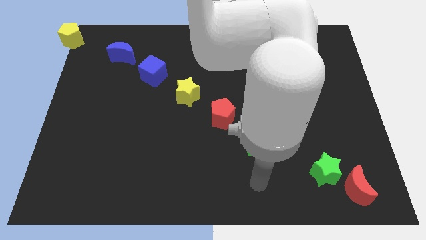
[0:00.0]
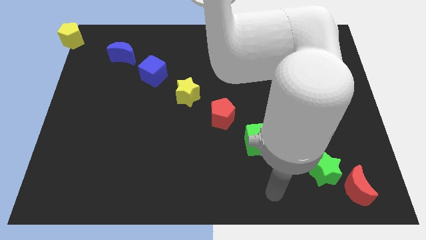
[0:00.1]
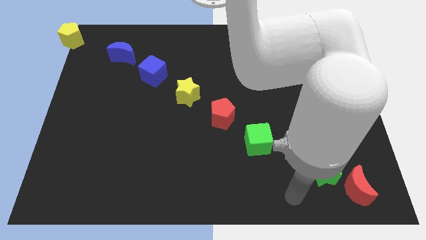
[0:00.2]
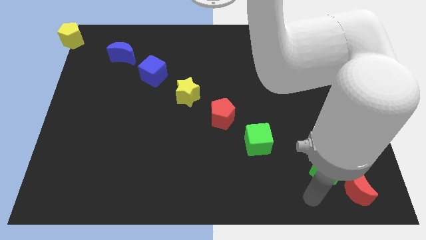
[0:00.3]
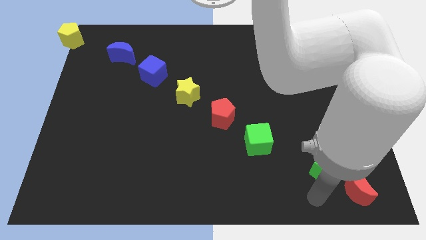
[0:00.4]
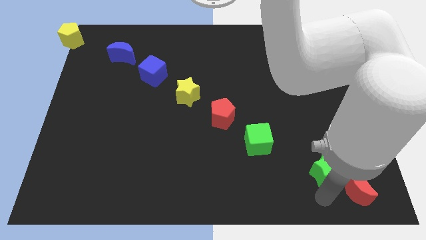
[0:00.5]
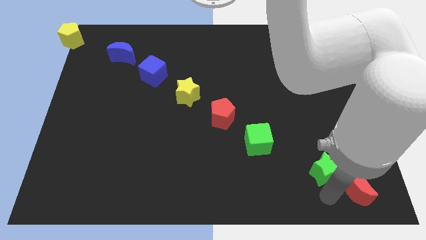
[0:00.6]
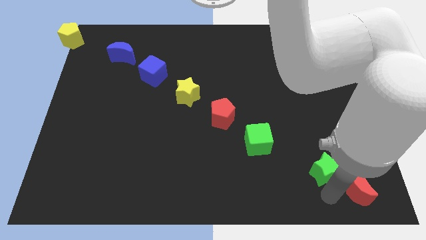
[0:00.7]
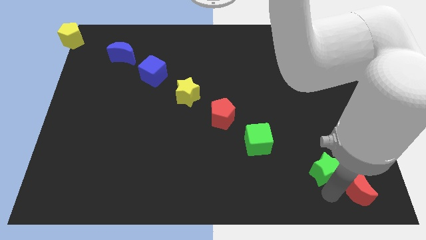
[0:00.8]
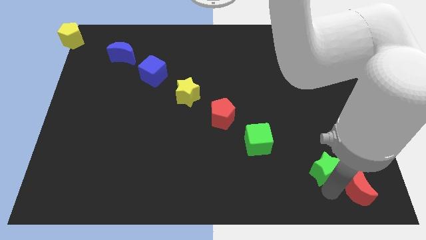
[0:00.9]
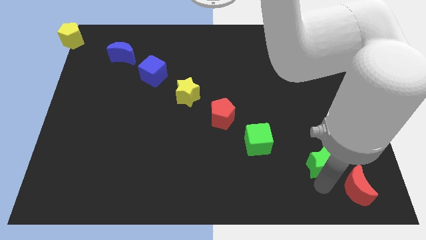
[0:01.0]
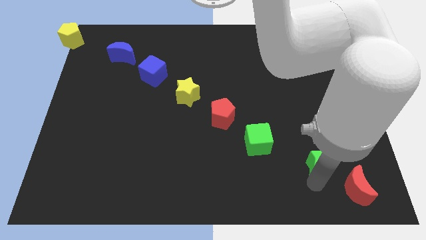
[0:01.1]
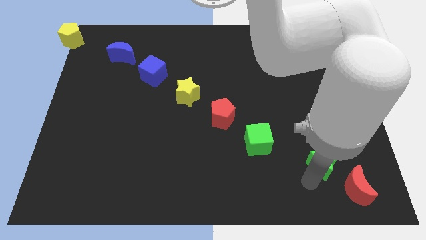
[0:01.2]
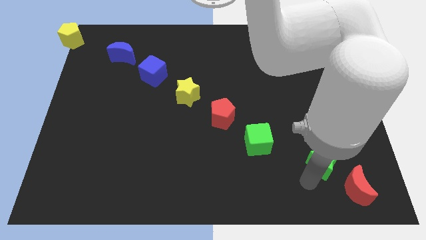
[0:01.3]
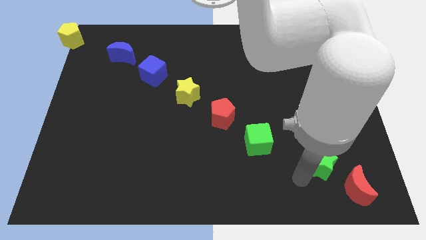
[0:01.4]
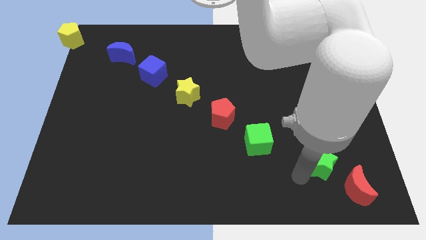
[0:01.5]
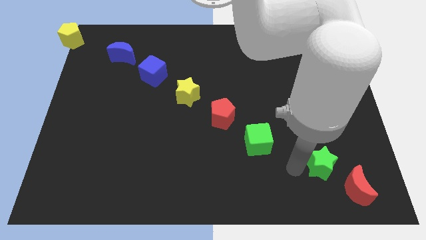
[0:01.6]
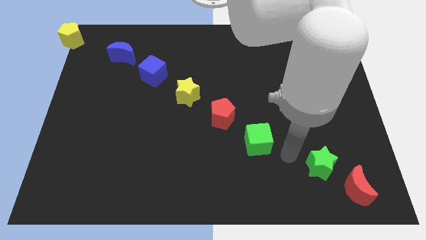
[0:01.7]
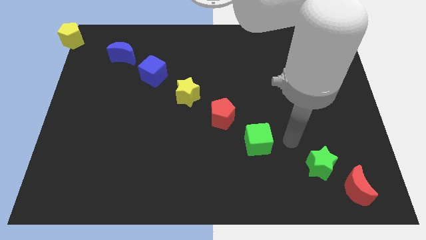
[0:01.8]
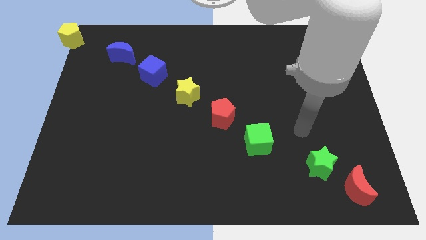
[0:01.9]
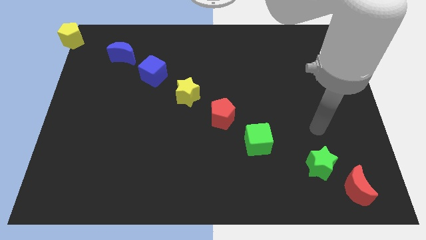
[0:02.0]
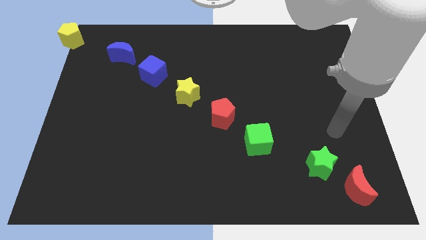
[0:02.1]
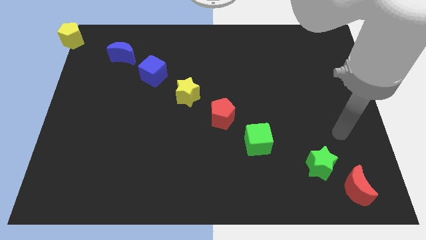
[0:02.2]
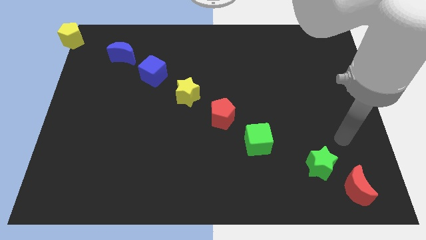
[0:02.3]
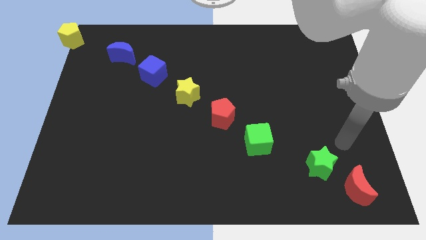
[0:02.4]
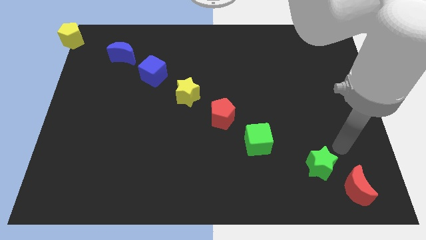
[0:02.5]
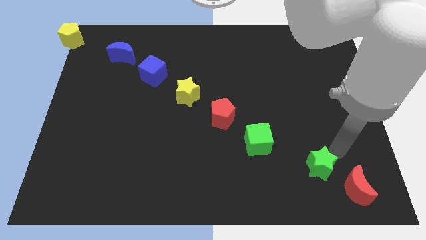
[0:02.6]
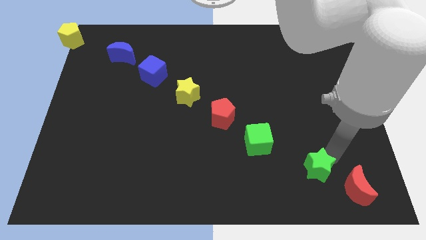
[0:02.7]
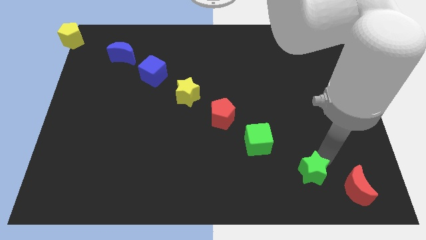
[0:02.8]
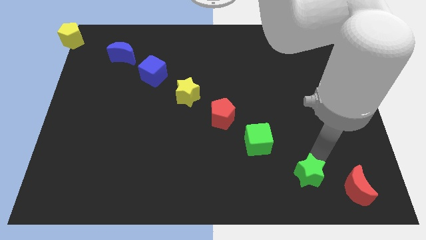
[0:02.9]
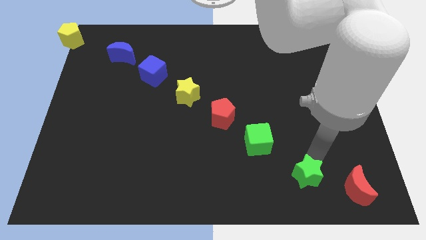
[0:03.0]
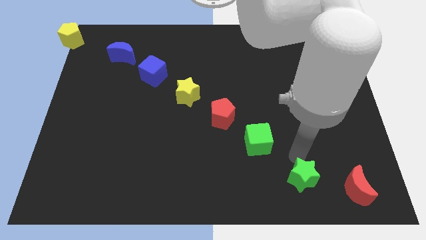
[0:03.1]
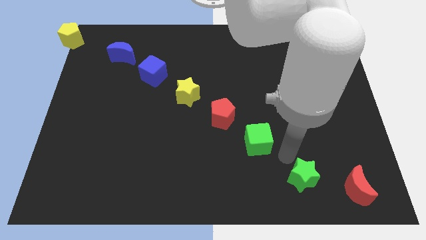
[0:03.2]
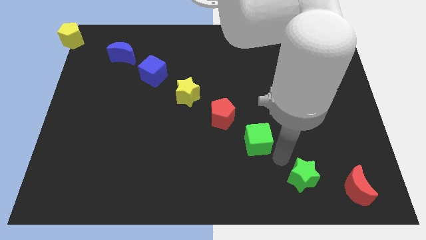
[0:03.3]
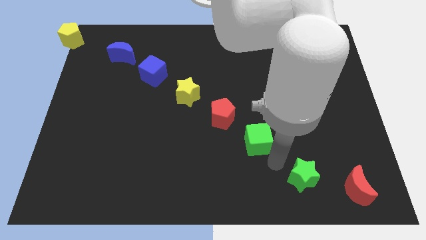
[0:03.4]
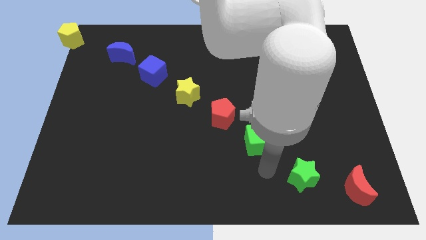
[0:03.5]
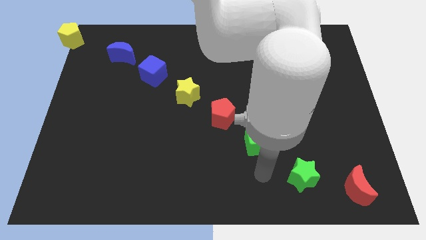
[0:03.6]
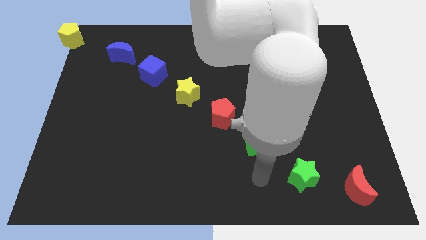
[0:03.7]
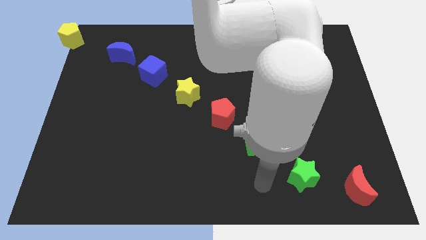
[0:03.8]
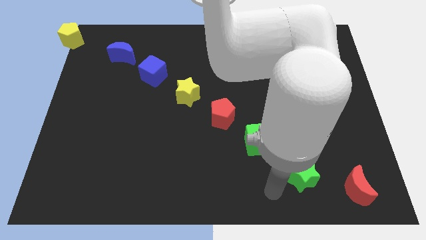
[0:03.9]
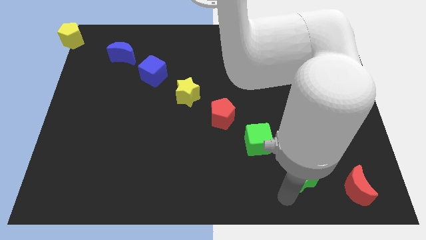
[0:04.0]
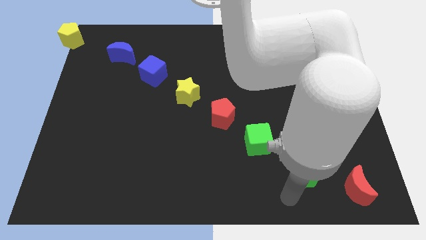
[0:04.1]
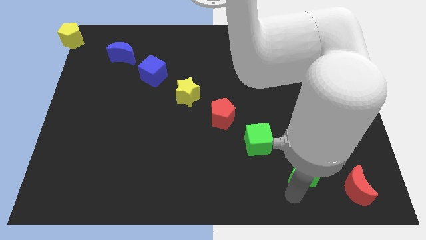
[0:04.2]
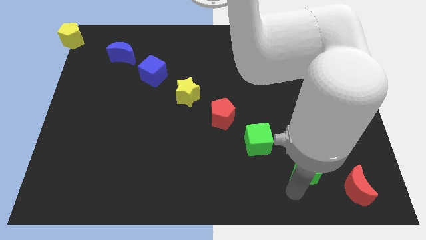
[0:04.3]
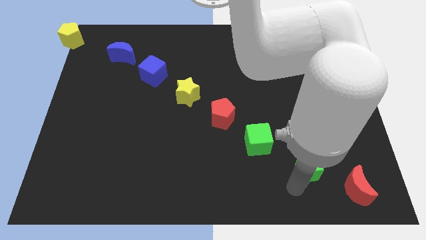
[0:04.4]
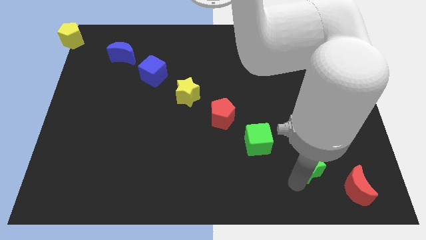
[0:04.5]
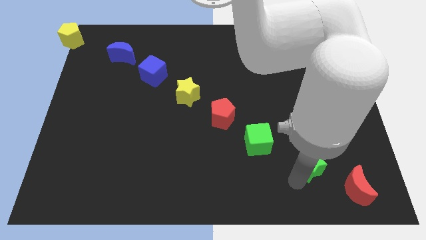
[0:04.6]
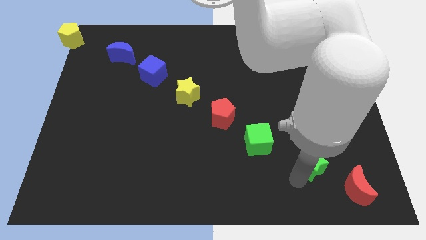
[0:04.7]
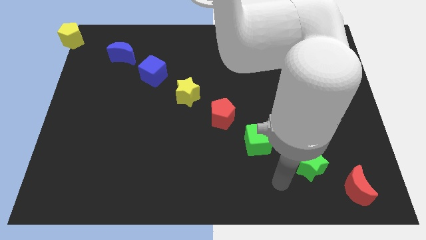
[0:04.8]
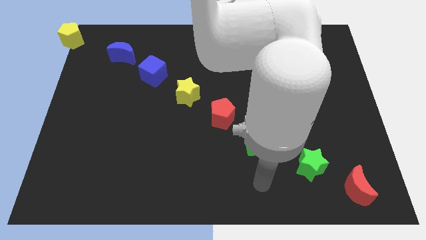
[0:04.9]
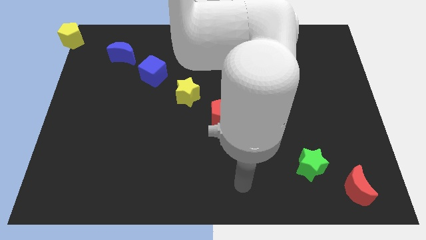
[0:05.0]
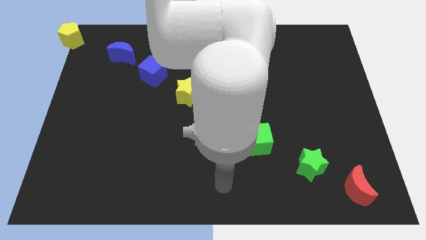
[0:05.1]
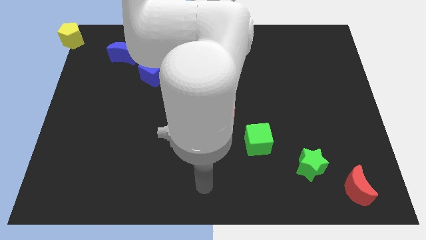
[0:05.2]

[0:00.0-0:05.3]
adjust the position of the green star upwards

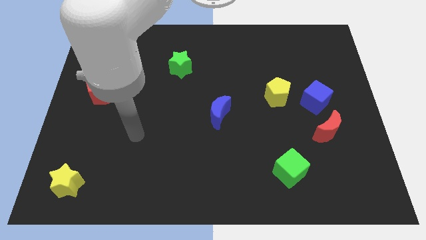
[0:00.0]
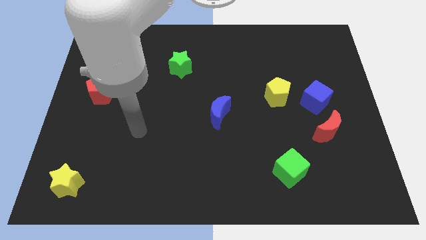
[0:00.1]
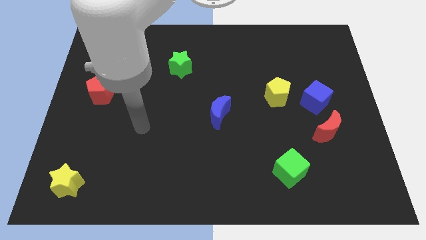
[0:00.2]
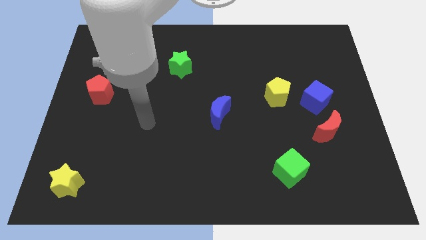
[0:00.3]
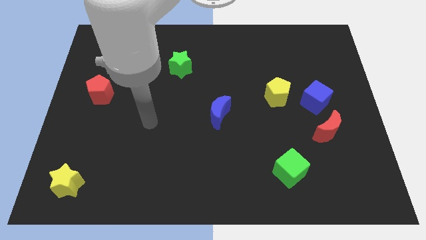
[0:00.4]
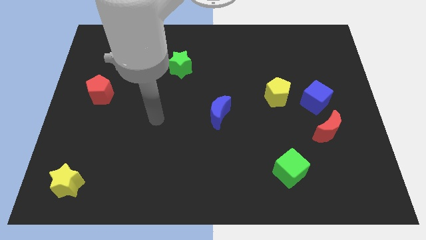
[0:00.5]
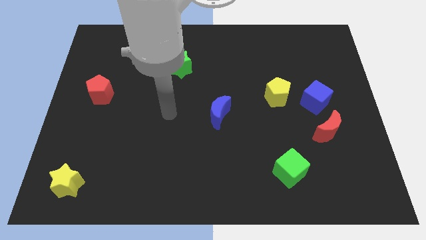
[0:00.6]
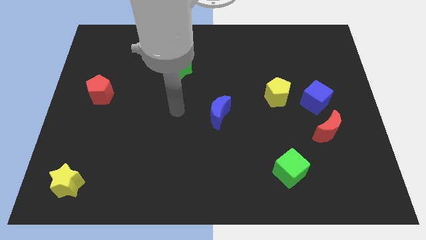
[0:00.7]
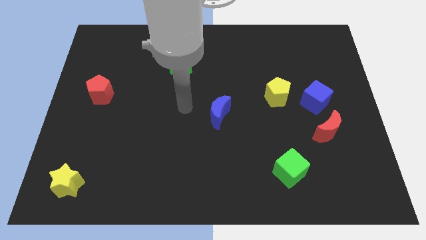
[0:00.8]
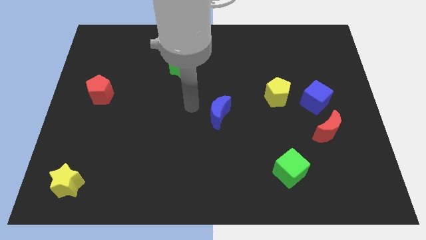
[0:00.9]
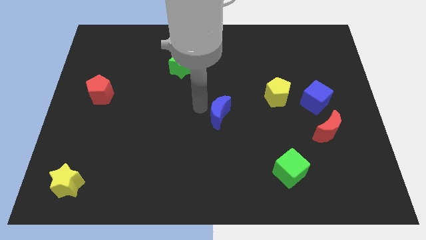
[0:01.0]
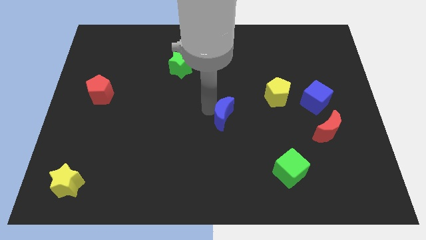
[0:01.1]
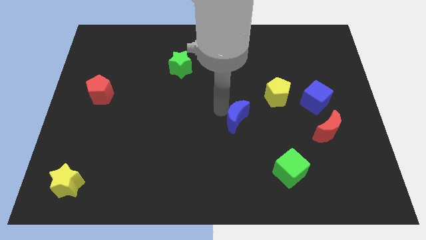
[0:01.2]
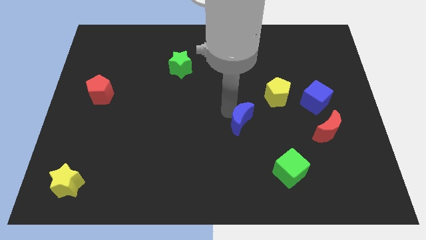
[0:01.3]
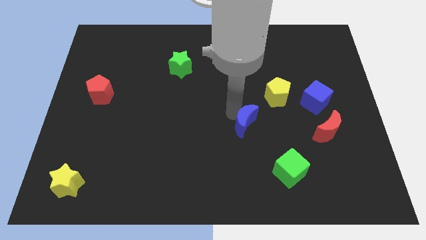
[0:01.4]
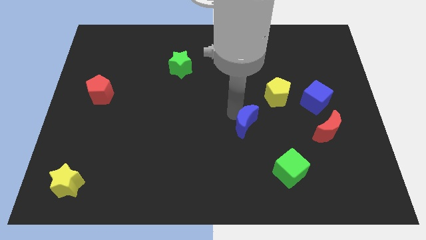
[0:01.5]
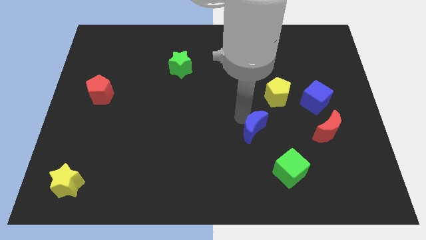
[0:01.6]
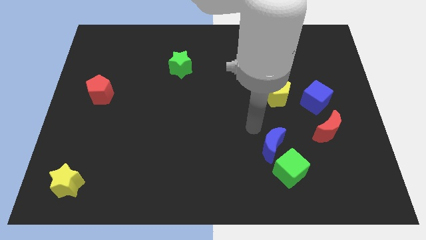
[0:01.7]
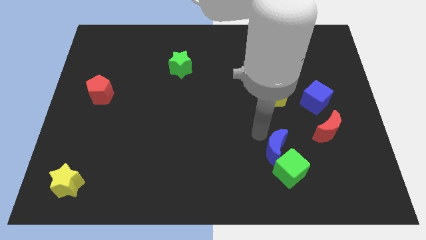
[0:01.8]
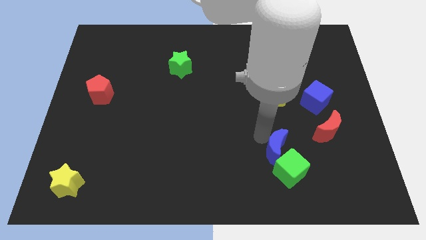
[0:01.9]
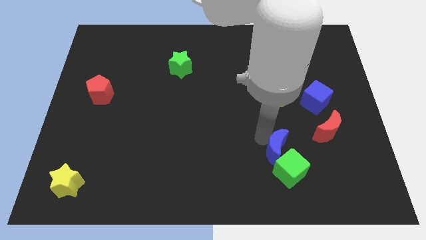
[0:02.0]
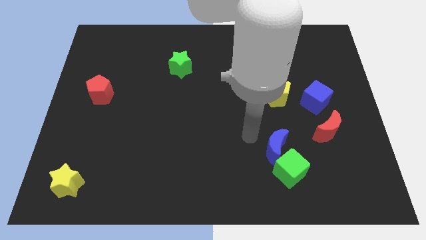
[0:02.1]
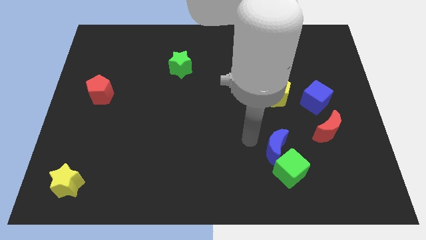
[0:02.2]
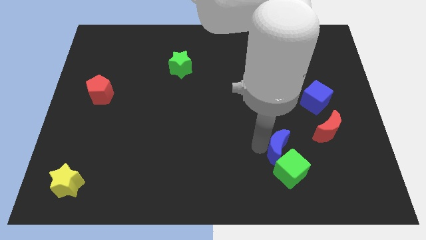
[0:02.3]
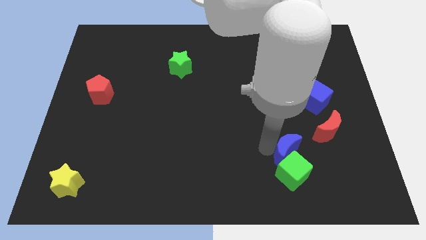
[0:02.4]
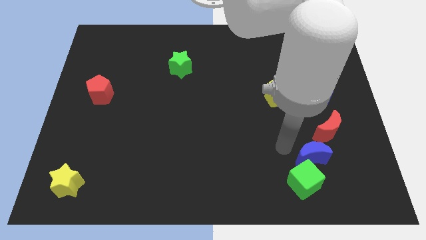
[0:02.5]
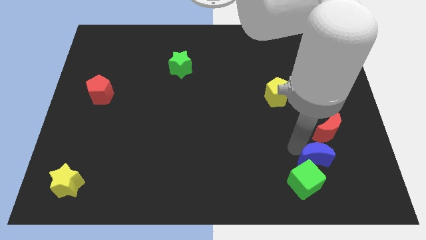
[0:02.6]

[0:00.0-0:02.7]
move blue crescent into the green cube

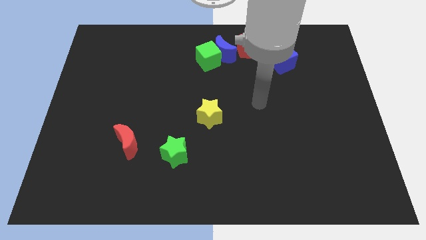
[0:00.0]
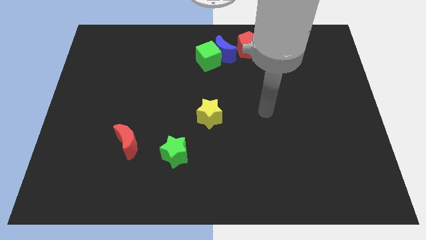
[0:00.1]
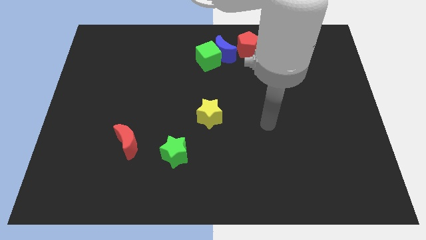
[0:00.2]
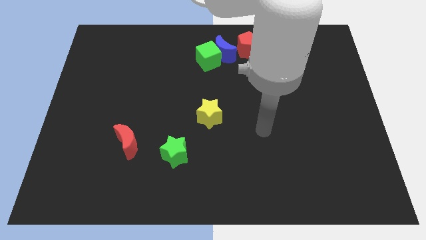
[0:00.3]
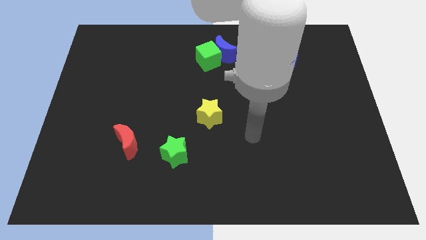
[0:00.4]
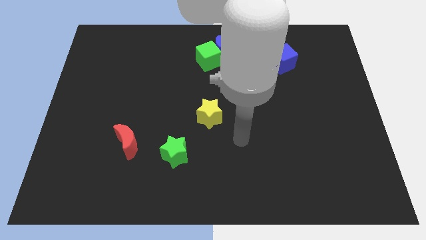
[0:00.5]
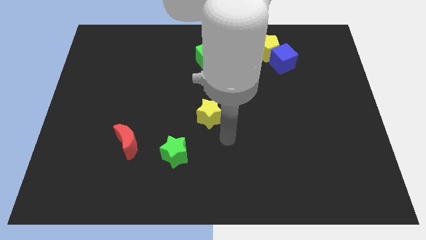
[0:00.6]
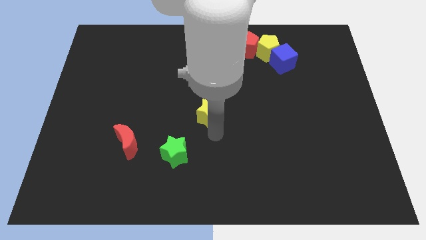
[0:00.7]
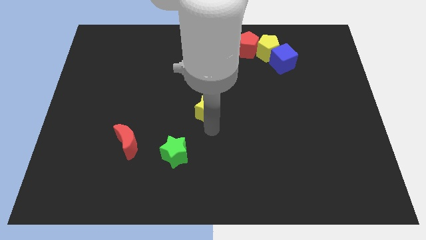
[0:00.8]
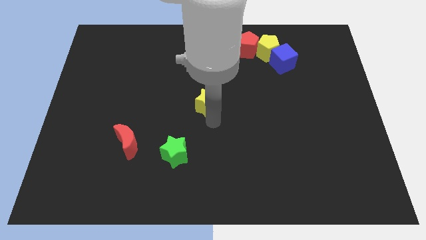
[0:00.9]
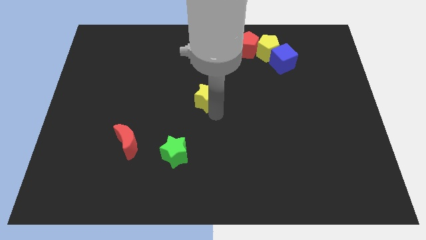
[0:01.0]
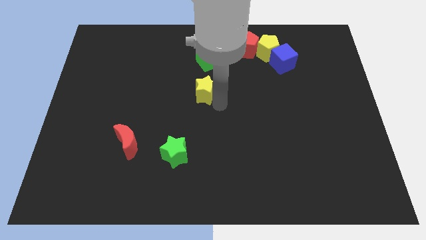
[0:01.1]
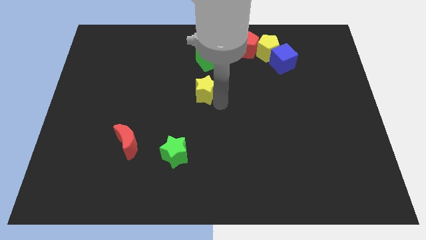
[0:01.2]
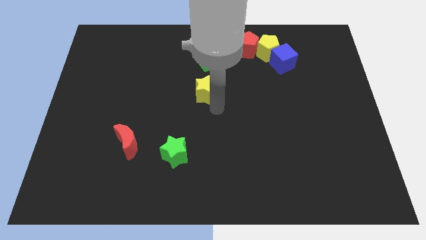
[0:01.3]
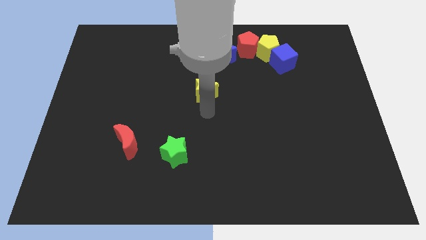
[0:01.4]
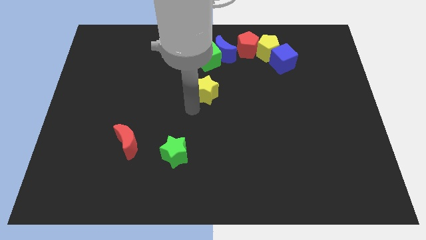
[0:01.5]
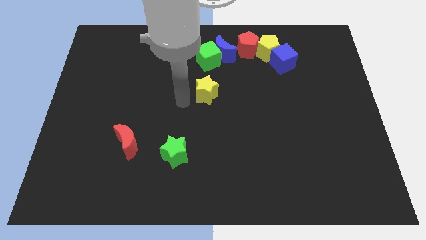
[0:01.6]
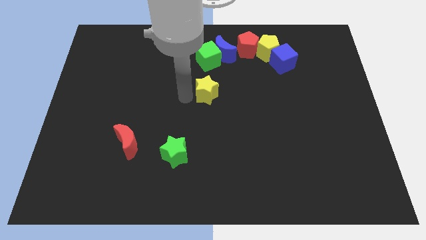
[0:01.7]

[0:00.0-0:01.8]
push the yellow star towards the green cube
